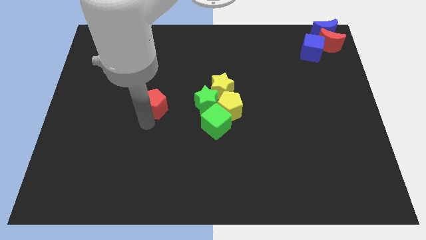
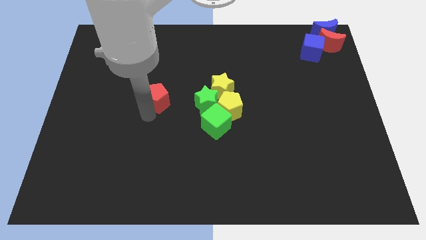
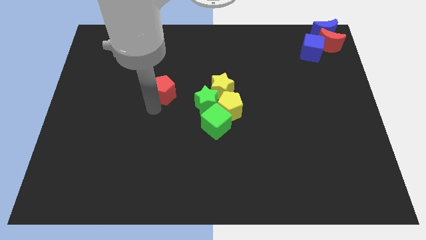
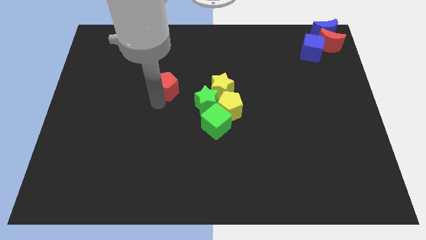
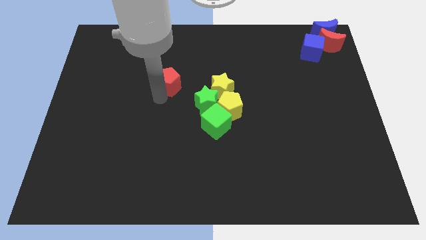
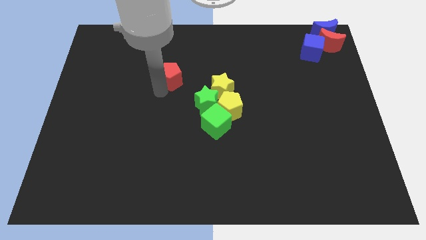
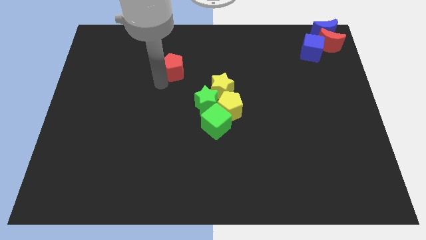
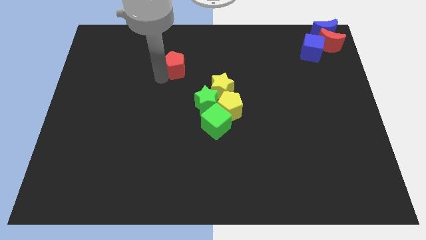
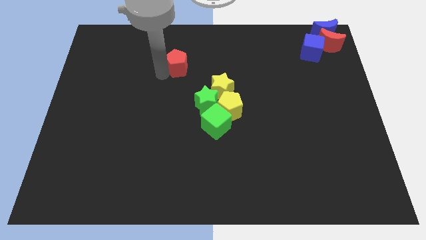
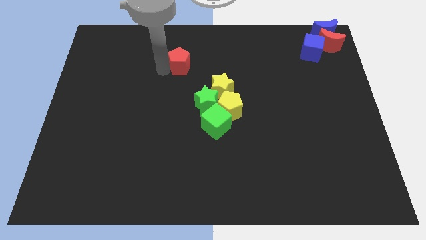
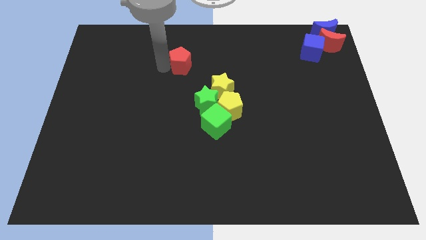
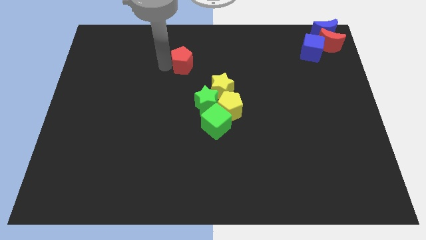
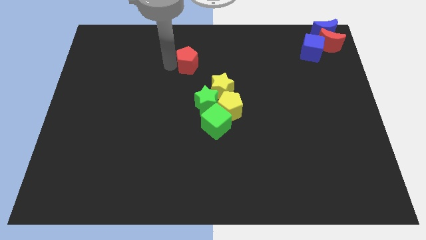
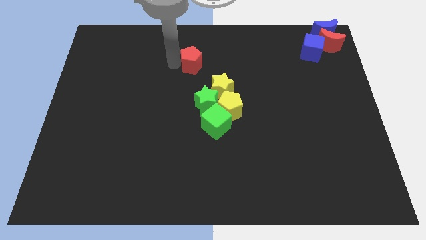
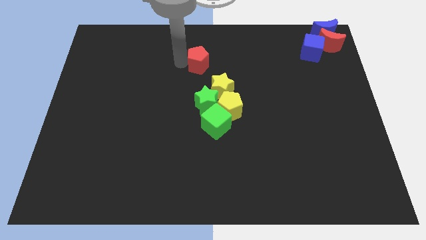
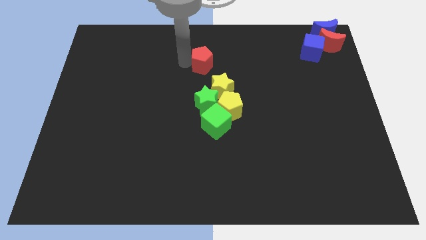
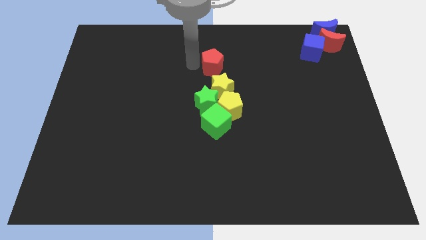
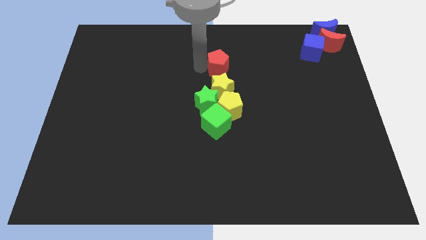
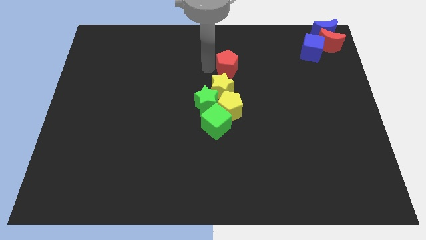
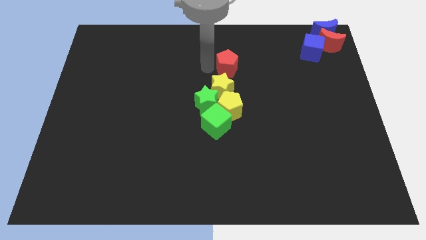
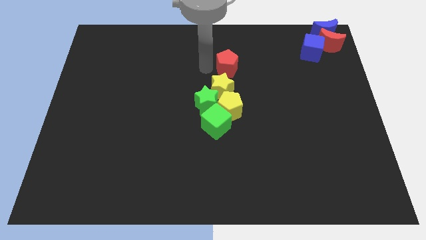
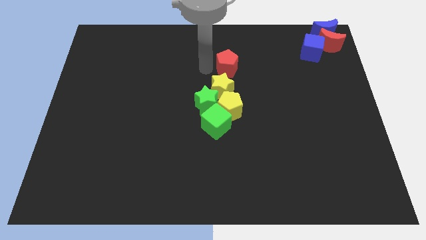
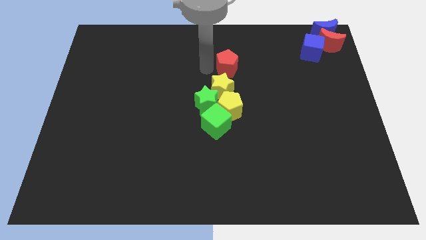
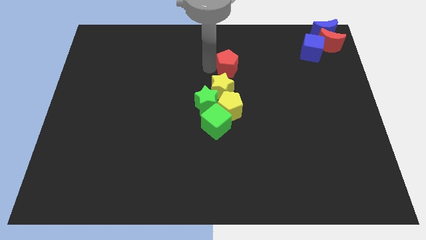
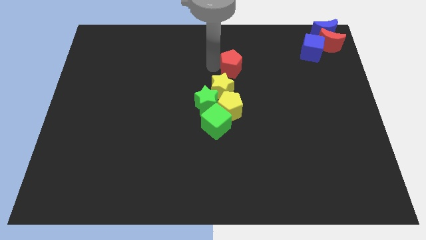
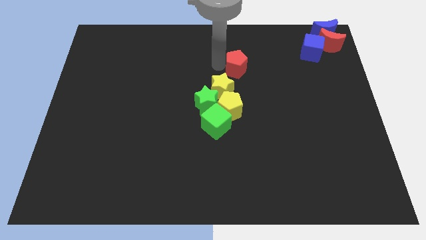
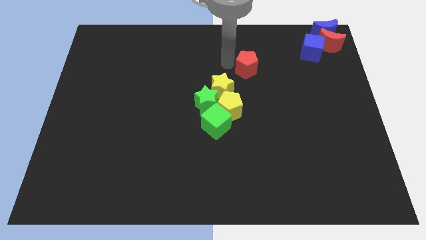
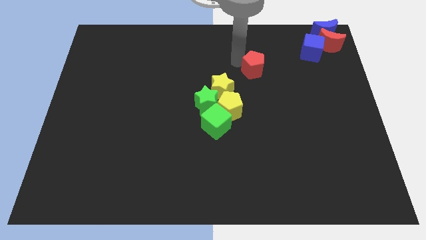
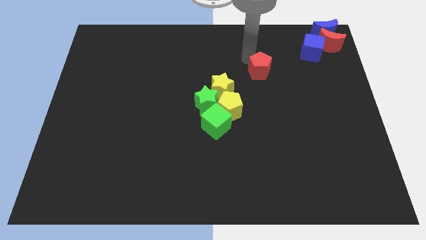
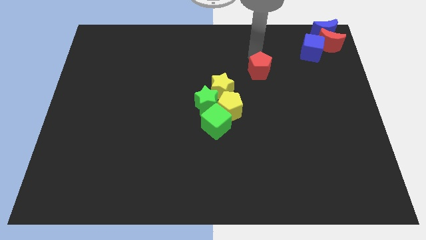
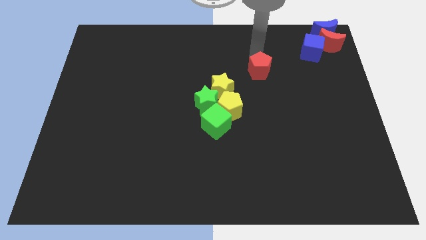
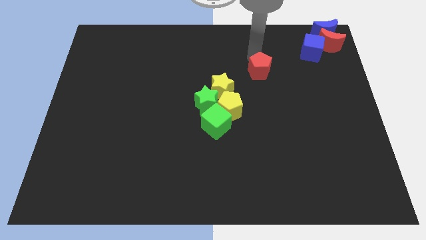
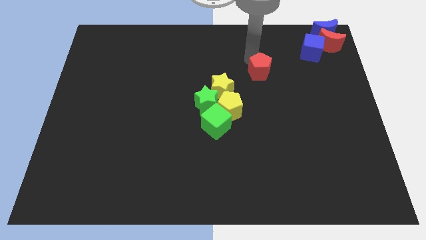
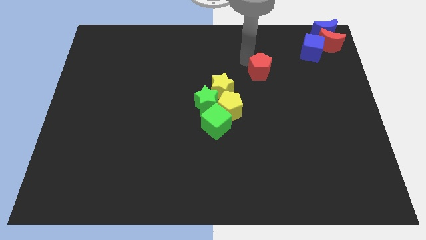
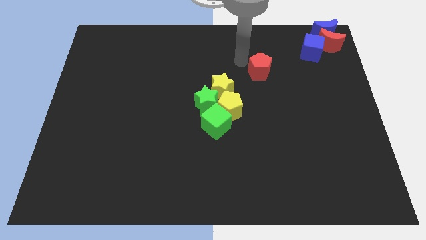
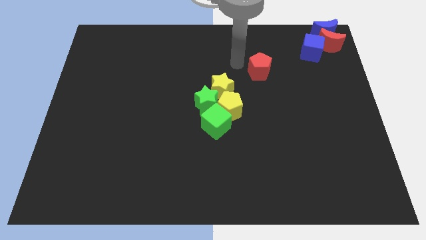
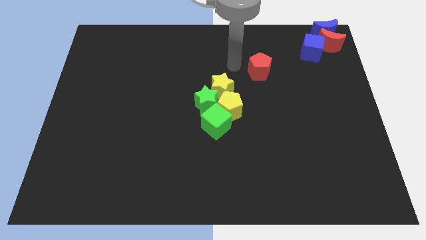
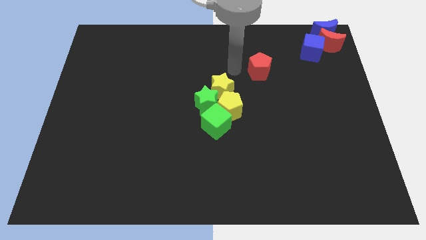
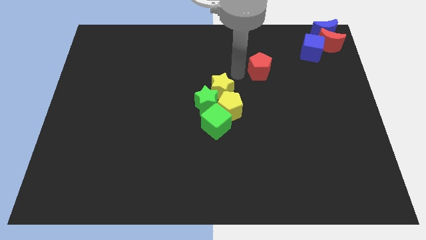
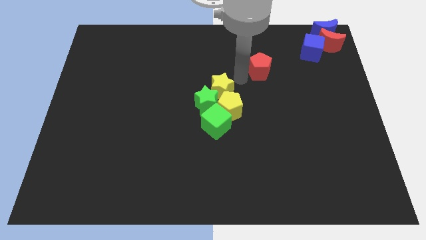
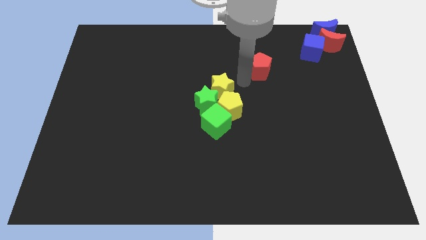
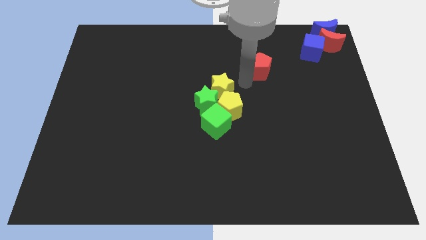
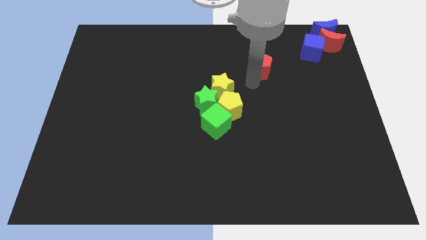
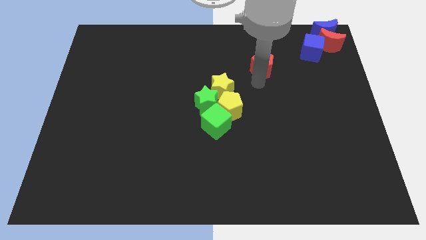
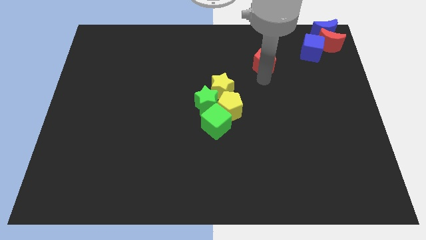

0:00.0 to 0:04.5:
move the red pentagon in between the yellow star and blue cube

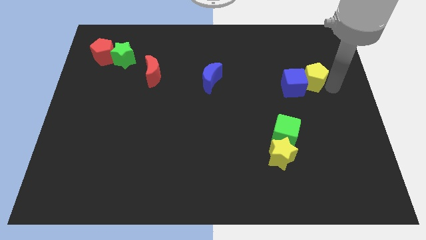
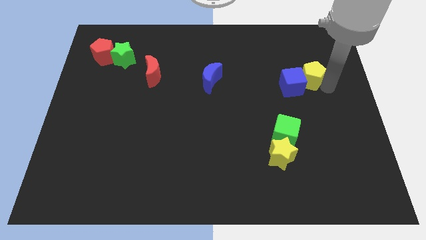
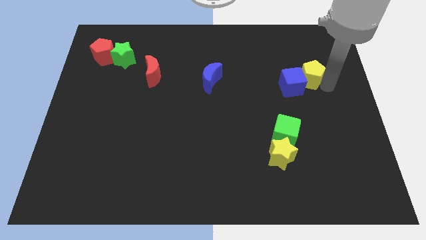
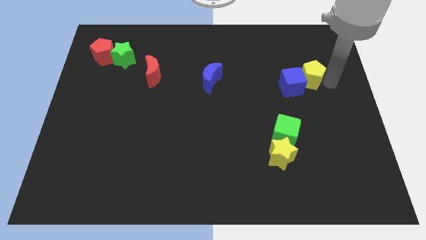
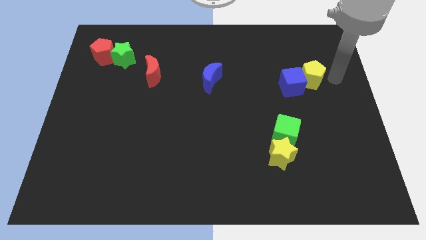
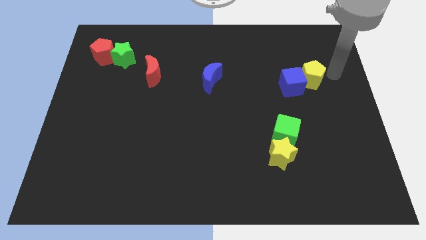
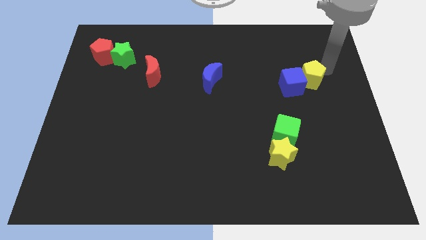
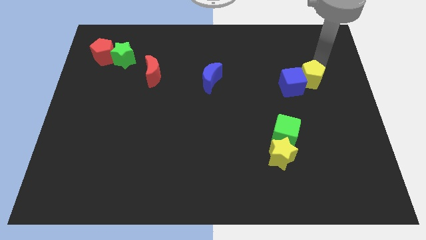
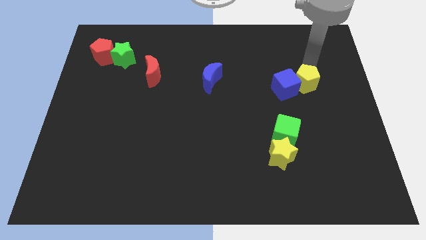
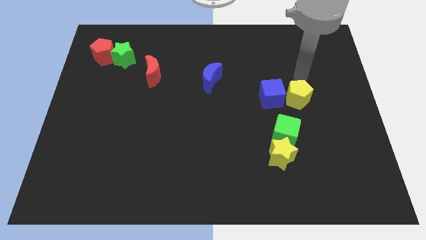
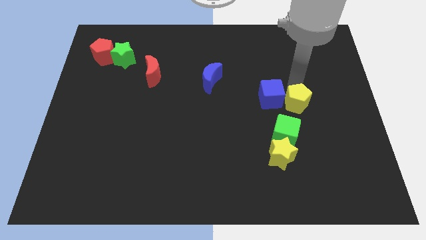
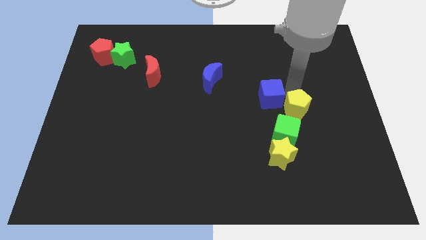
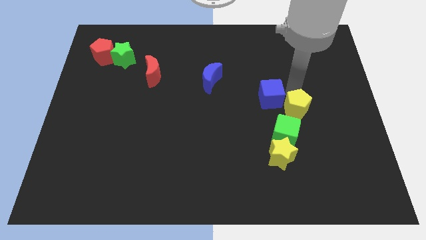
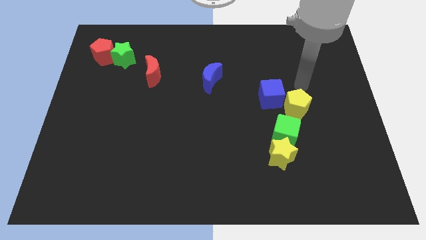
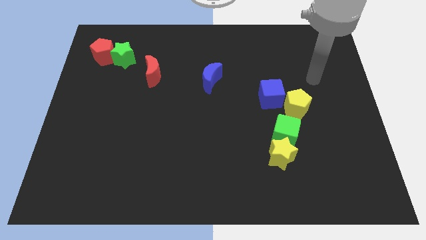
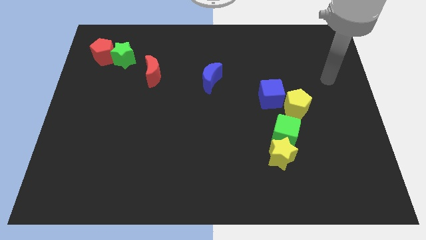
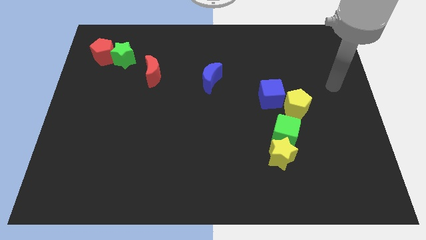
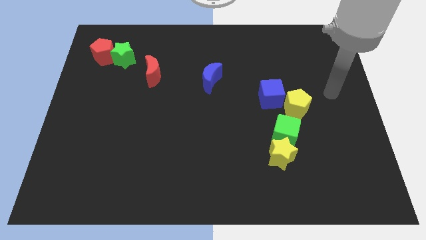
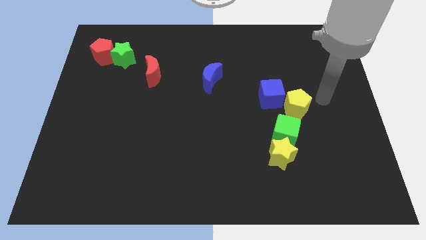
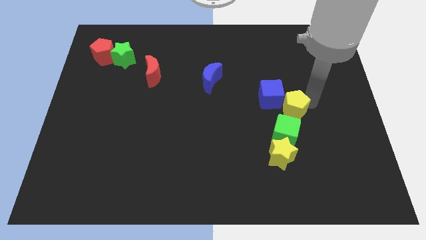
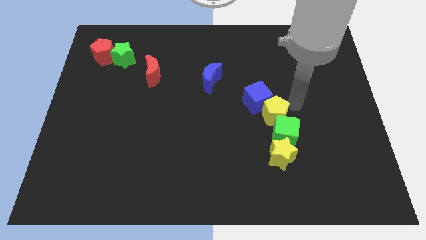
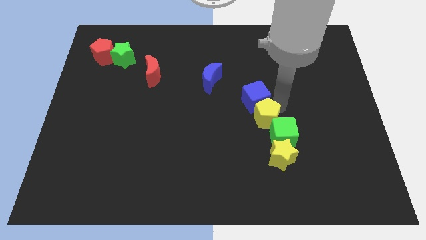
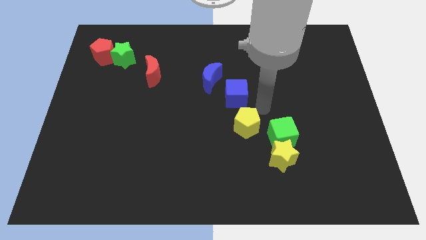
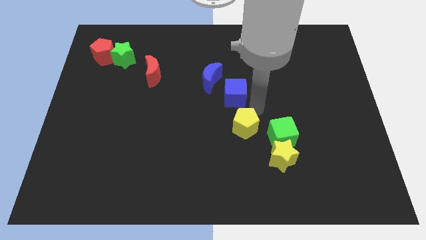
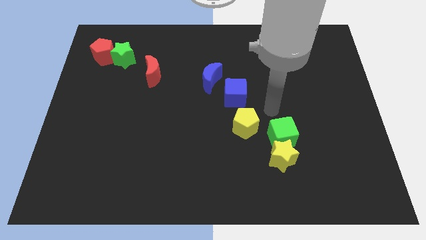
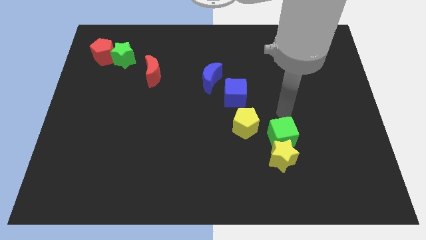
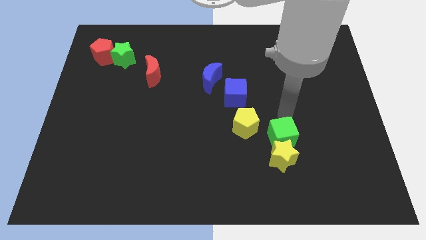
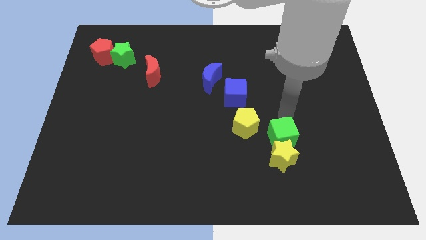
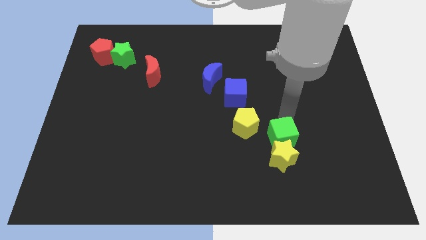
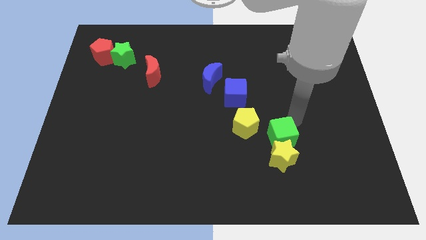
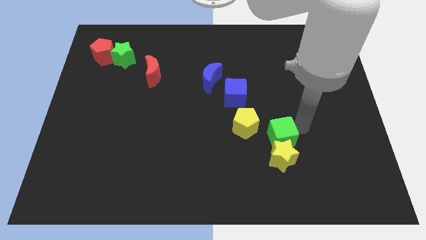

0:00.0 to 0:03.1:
push the blue cube and yellow pentagon towards the left side of the board

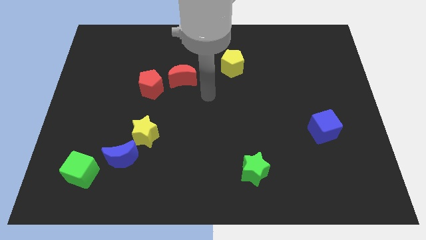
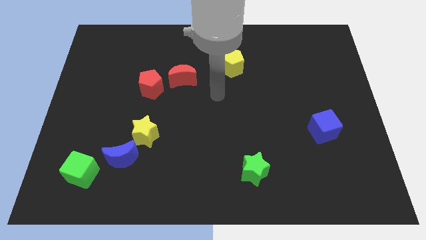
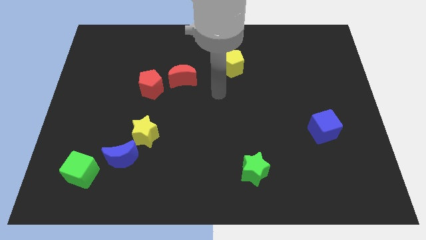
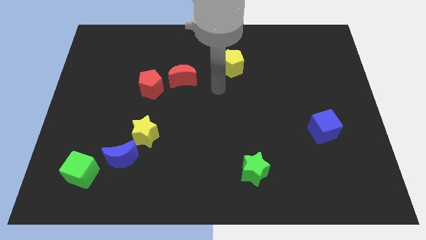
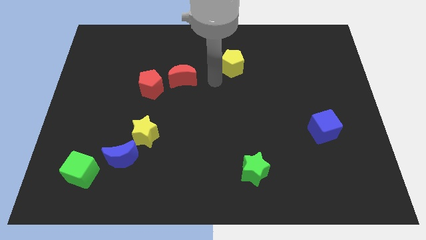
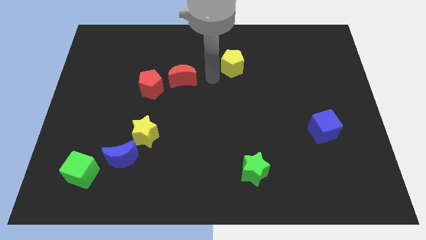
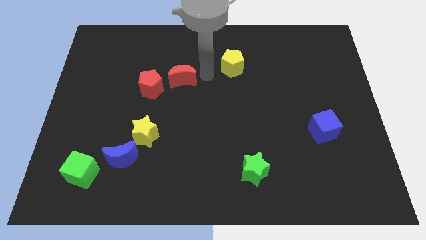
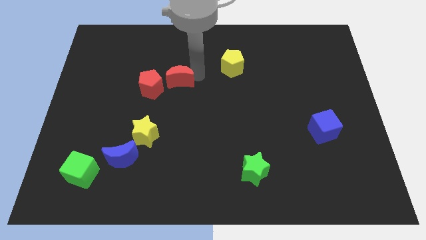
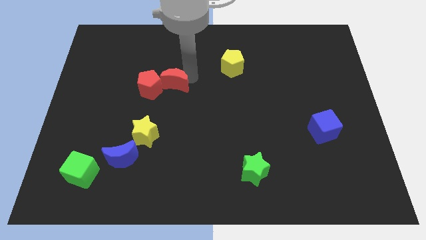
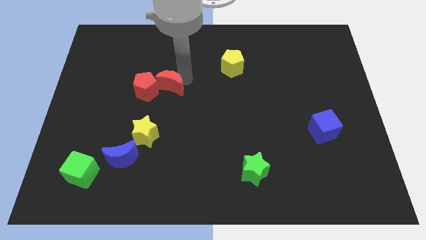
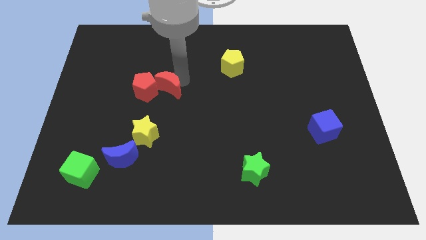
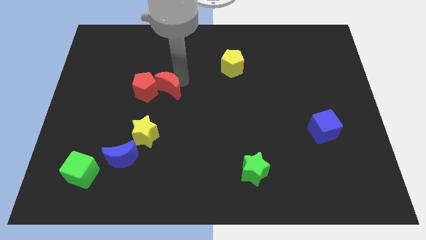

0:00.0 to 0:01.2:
push the red moon into the red pentagon
